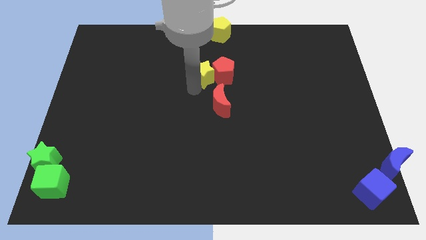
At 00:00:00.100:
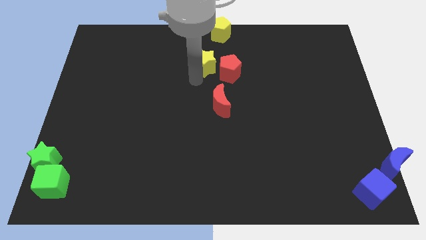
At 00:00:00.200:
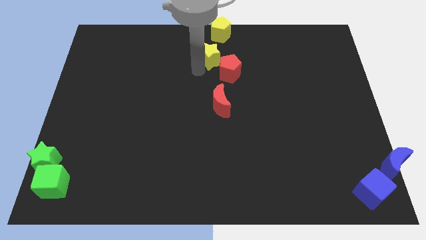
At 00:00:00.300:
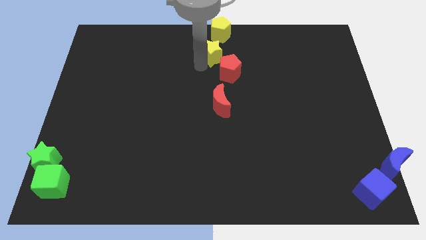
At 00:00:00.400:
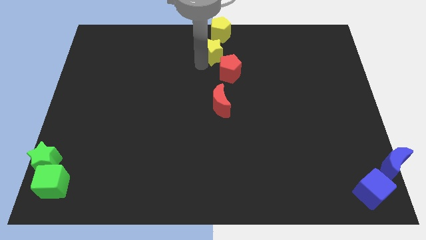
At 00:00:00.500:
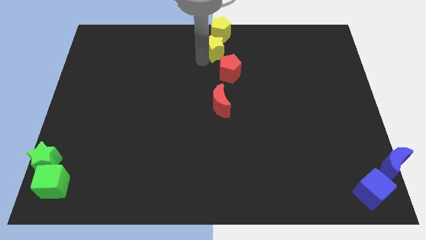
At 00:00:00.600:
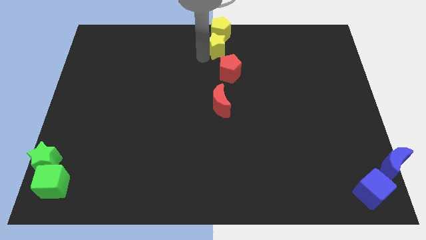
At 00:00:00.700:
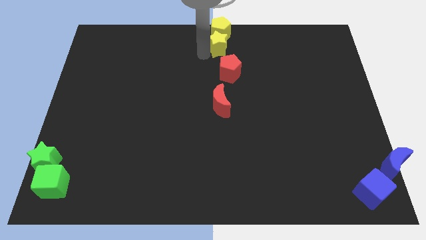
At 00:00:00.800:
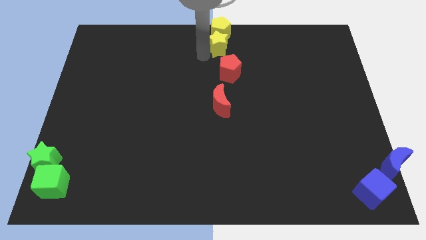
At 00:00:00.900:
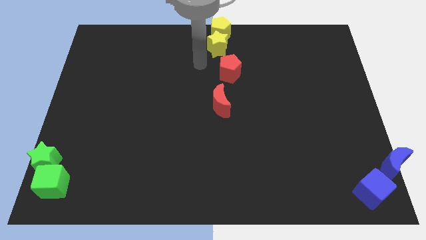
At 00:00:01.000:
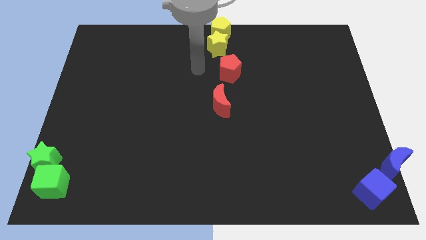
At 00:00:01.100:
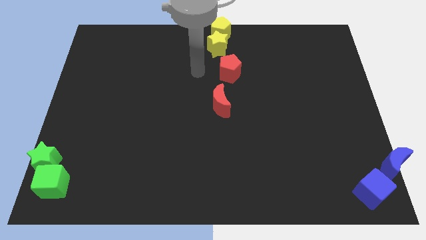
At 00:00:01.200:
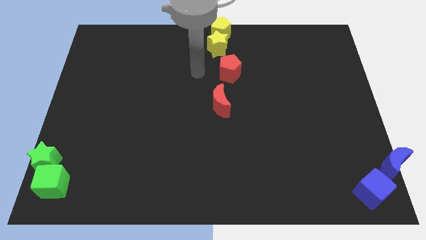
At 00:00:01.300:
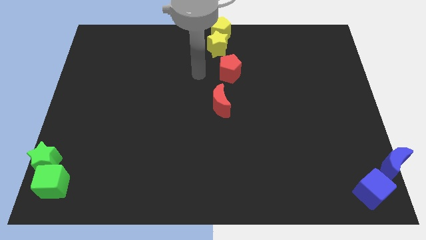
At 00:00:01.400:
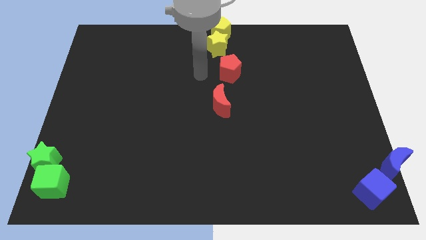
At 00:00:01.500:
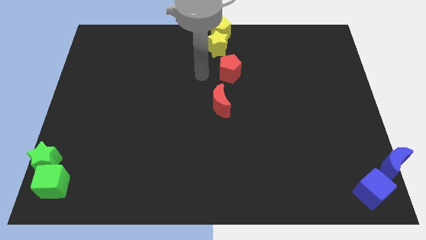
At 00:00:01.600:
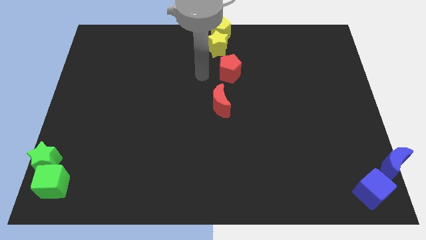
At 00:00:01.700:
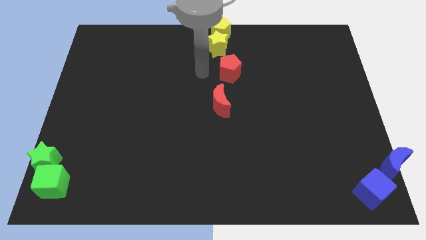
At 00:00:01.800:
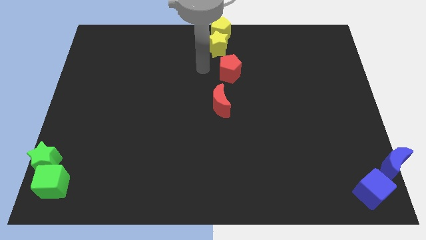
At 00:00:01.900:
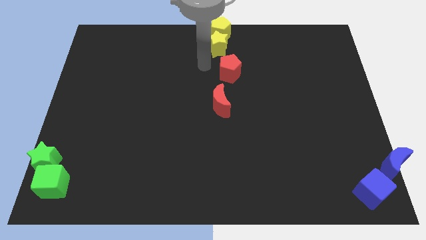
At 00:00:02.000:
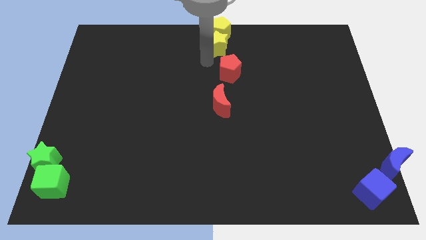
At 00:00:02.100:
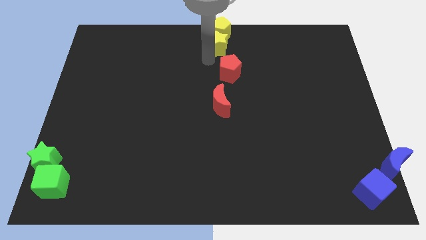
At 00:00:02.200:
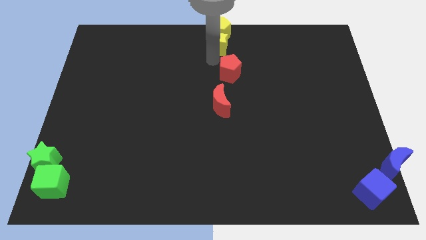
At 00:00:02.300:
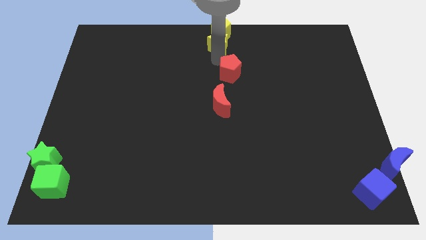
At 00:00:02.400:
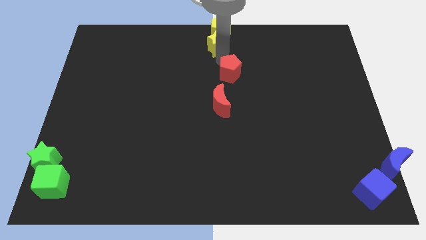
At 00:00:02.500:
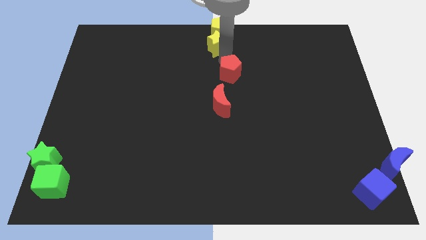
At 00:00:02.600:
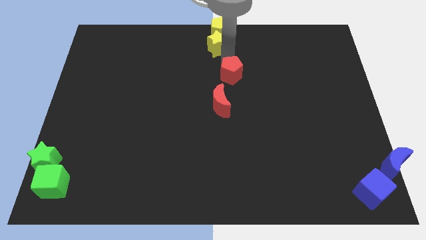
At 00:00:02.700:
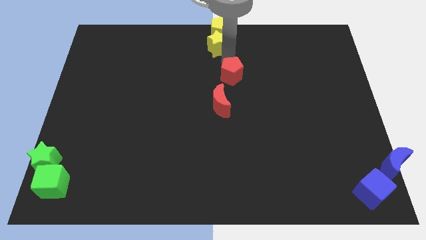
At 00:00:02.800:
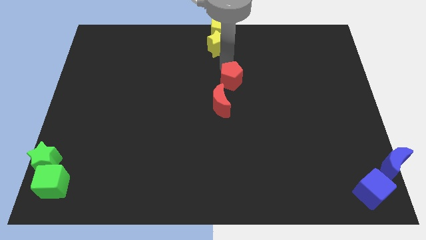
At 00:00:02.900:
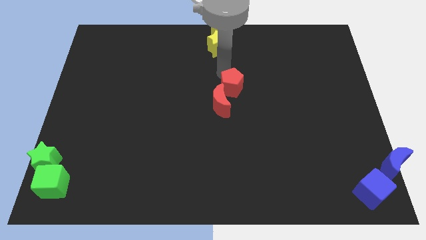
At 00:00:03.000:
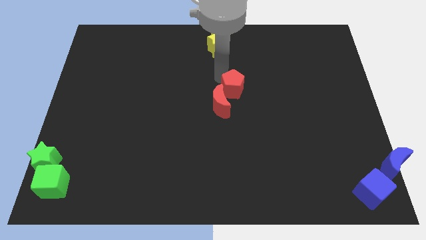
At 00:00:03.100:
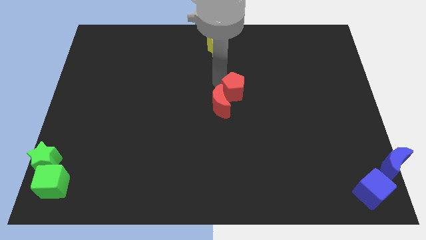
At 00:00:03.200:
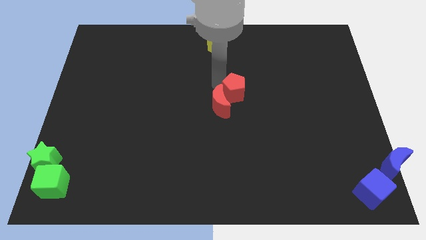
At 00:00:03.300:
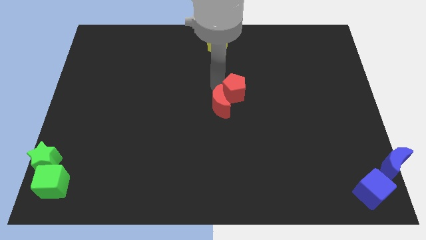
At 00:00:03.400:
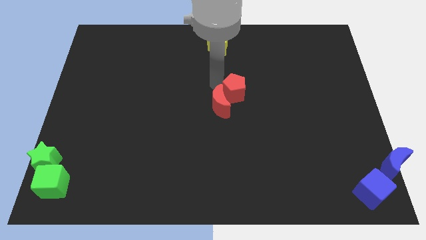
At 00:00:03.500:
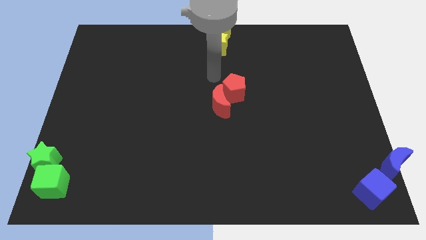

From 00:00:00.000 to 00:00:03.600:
separate the yellow blocks and red blocks from each other

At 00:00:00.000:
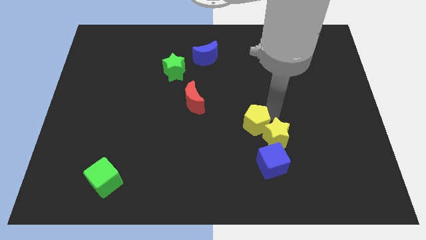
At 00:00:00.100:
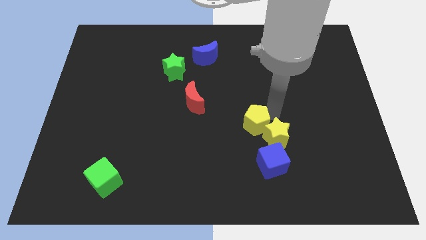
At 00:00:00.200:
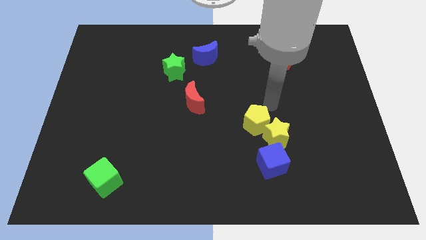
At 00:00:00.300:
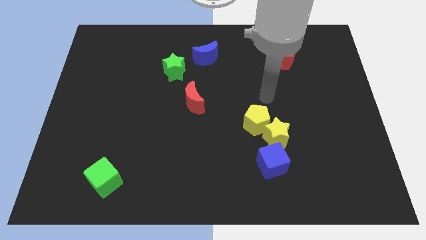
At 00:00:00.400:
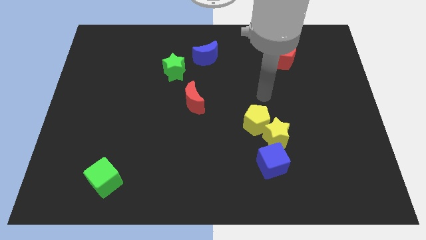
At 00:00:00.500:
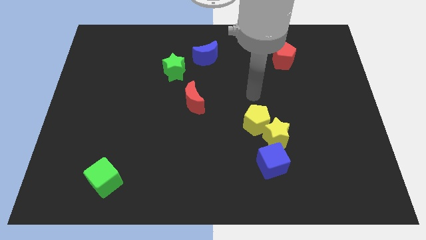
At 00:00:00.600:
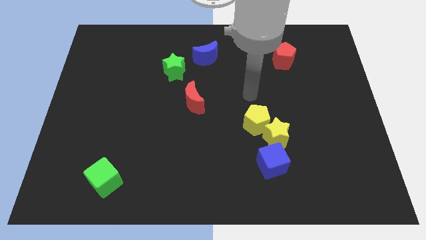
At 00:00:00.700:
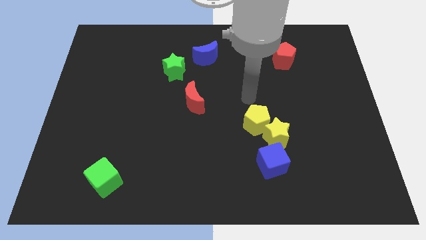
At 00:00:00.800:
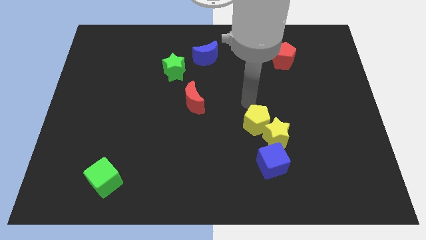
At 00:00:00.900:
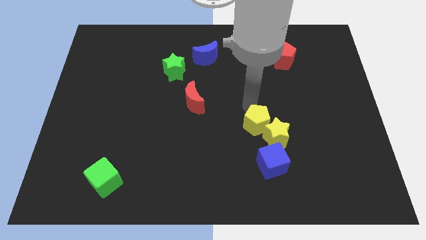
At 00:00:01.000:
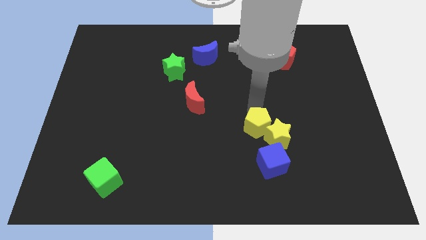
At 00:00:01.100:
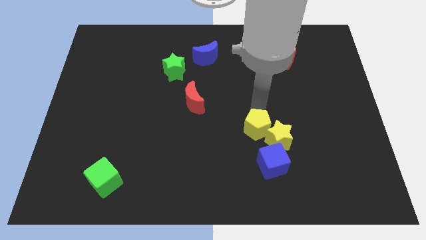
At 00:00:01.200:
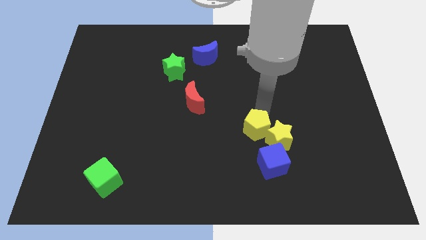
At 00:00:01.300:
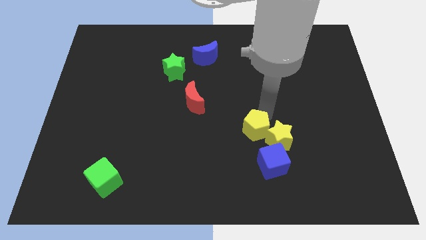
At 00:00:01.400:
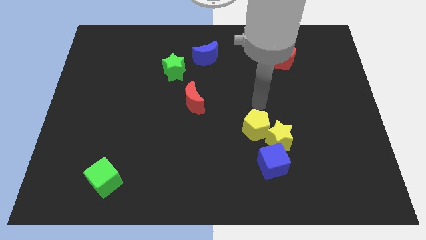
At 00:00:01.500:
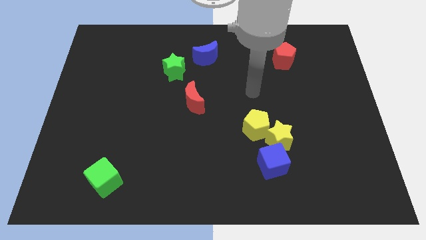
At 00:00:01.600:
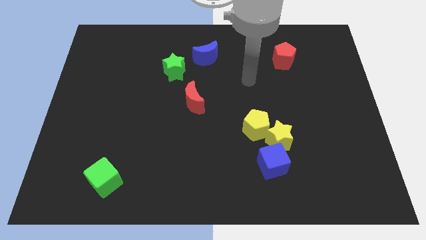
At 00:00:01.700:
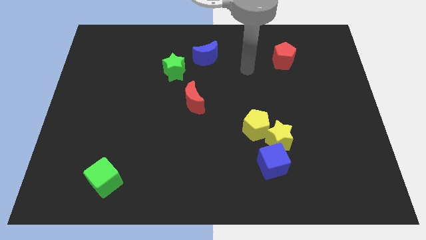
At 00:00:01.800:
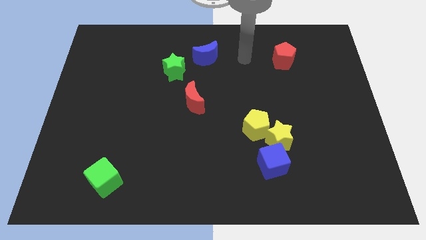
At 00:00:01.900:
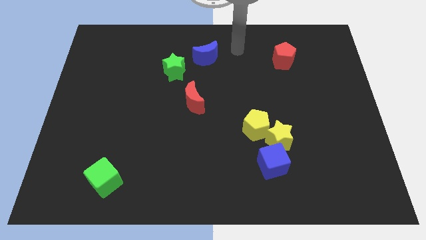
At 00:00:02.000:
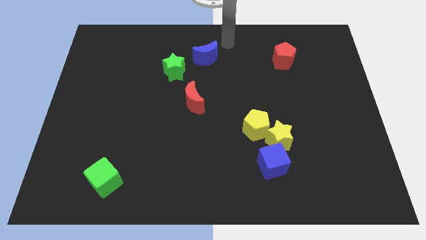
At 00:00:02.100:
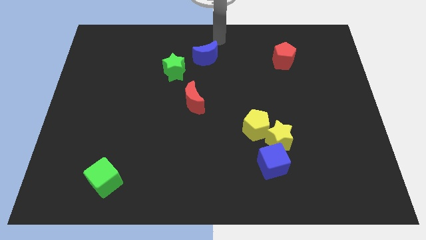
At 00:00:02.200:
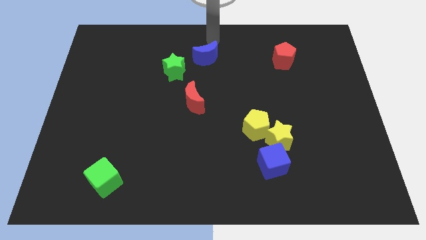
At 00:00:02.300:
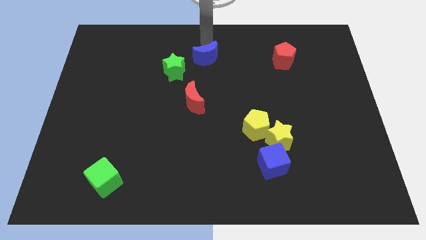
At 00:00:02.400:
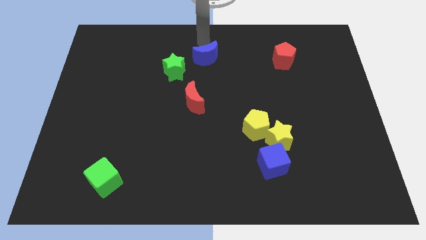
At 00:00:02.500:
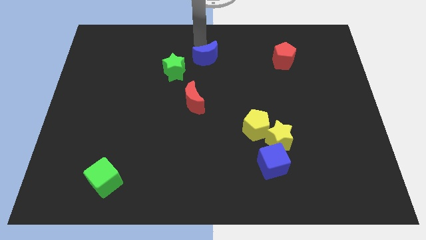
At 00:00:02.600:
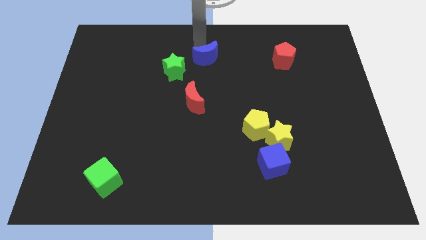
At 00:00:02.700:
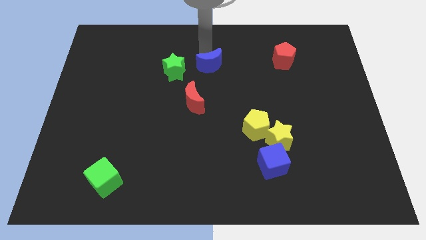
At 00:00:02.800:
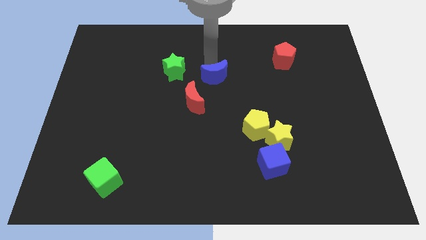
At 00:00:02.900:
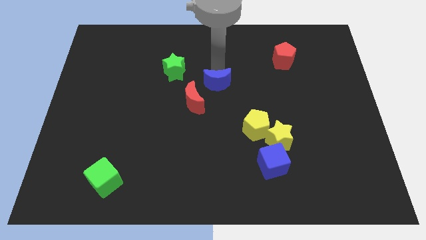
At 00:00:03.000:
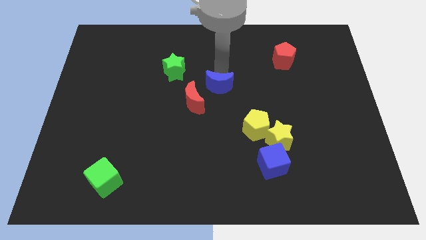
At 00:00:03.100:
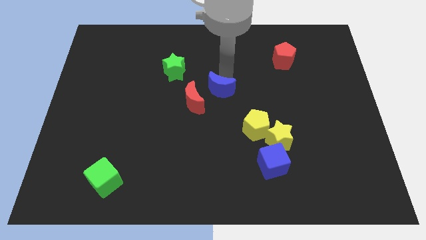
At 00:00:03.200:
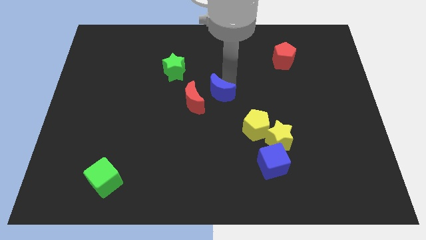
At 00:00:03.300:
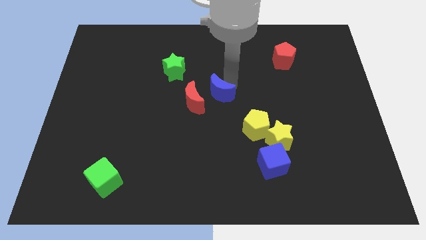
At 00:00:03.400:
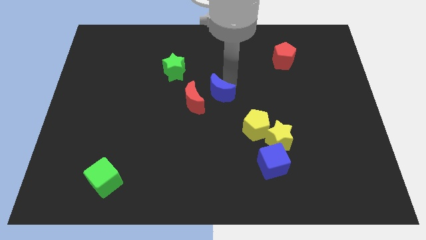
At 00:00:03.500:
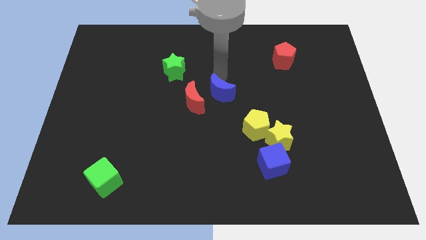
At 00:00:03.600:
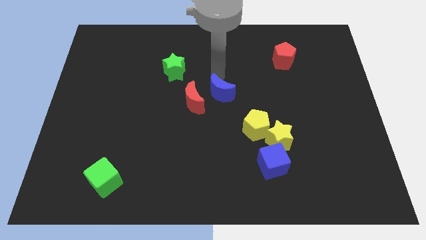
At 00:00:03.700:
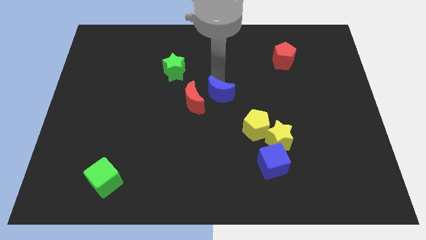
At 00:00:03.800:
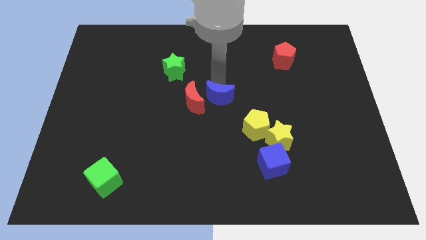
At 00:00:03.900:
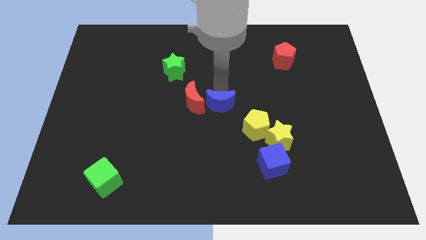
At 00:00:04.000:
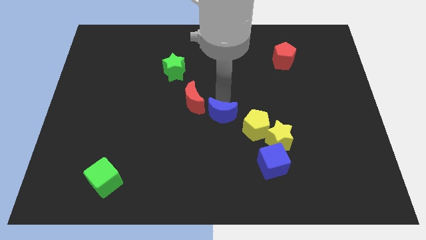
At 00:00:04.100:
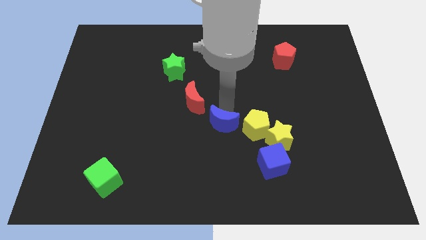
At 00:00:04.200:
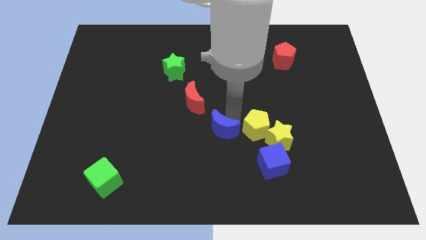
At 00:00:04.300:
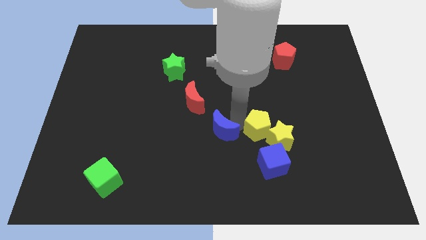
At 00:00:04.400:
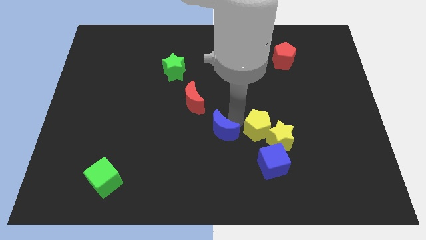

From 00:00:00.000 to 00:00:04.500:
move the blue cube left beside the yellow pentagon

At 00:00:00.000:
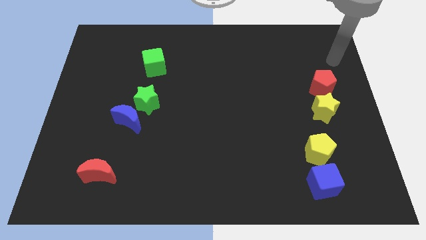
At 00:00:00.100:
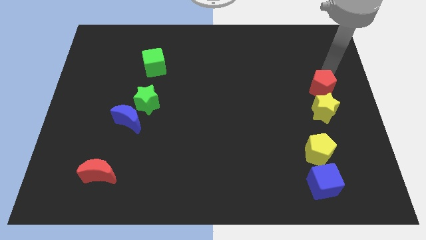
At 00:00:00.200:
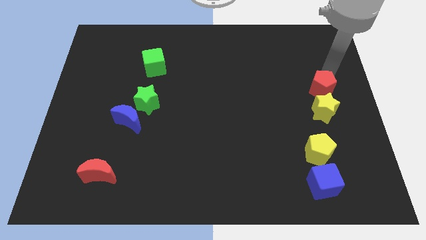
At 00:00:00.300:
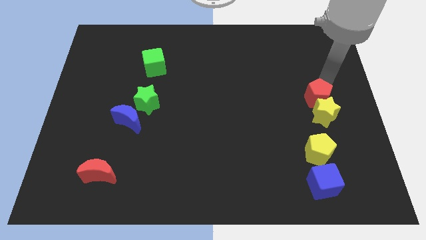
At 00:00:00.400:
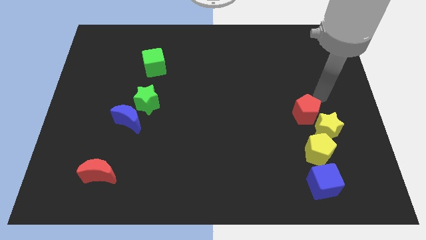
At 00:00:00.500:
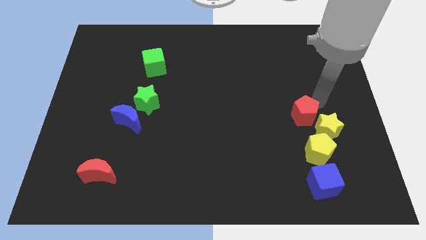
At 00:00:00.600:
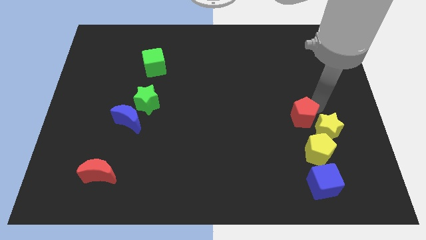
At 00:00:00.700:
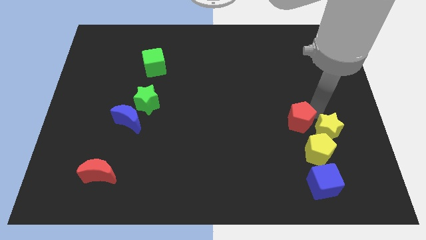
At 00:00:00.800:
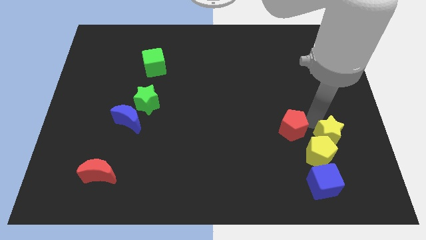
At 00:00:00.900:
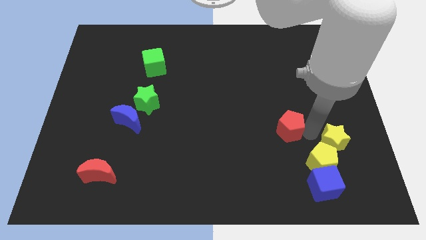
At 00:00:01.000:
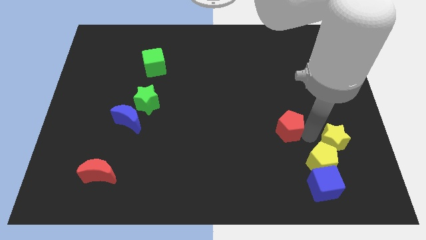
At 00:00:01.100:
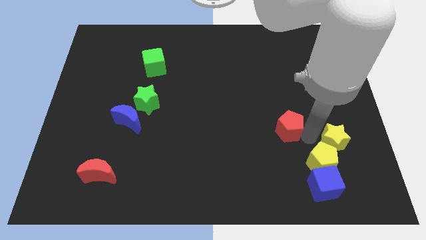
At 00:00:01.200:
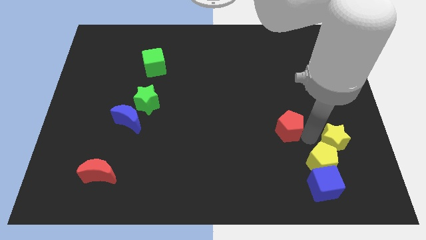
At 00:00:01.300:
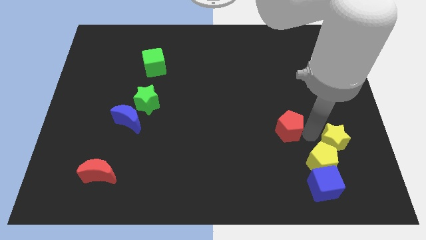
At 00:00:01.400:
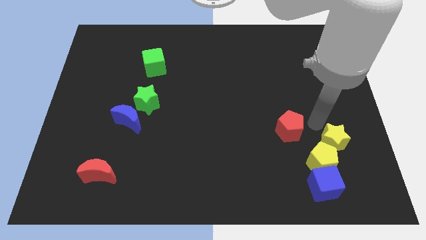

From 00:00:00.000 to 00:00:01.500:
push the red pentagon diagonally on the top left side of the yellow star
